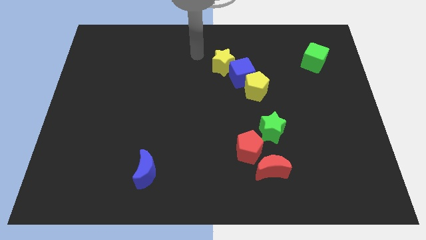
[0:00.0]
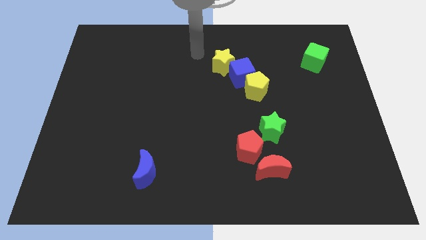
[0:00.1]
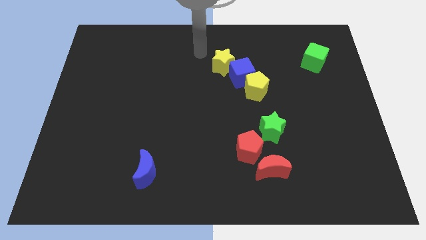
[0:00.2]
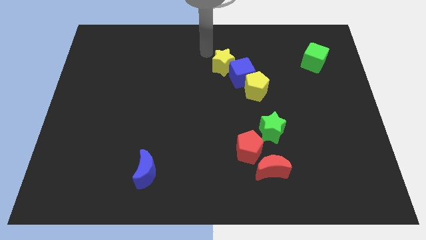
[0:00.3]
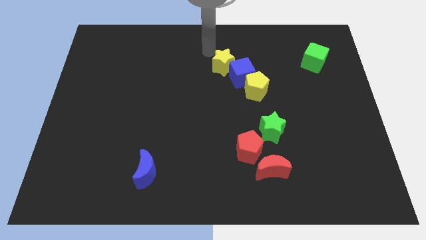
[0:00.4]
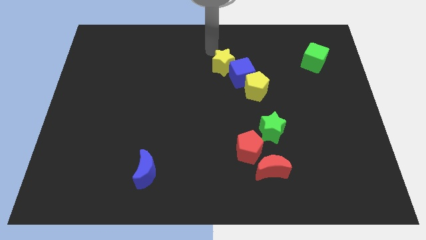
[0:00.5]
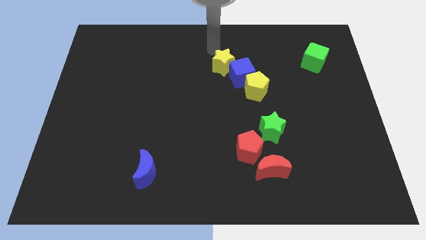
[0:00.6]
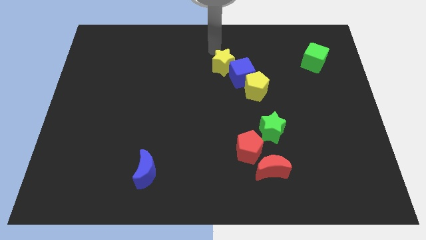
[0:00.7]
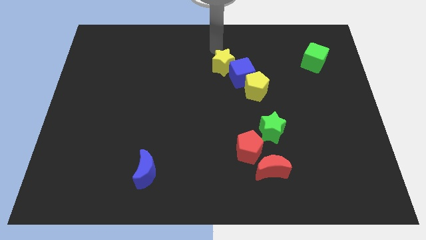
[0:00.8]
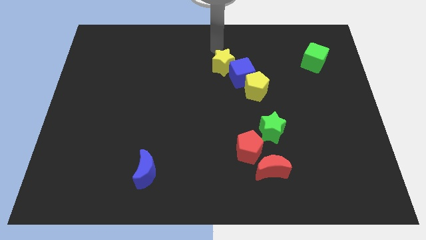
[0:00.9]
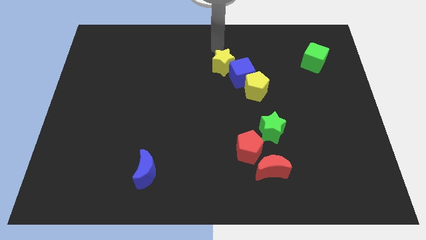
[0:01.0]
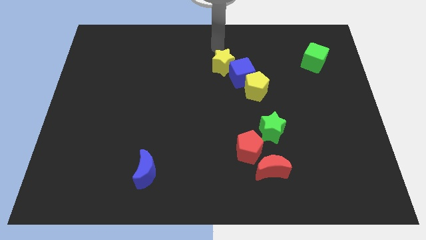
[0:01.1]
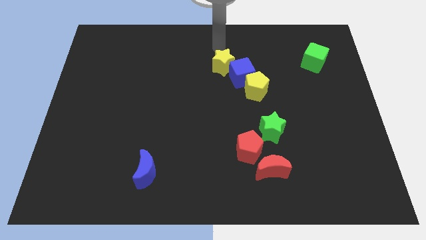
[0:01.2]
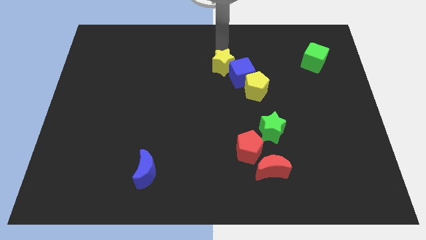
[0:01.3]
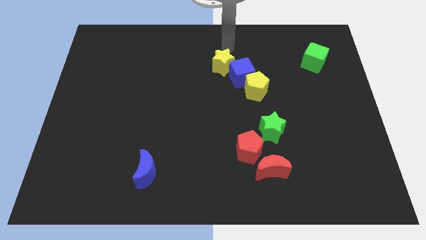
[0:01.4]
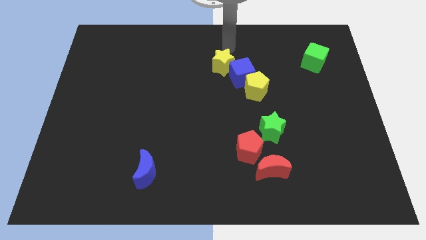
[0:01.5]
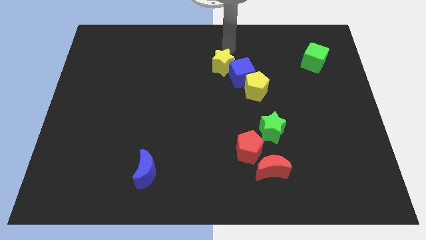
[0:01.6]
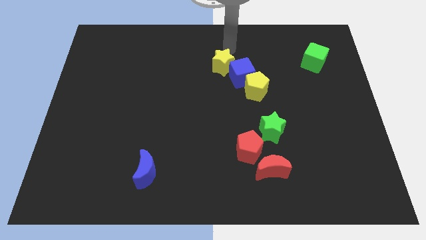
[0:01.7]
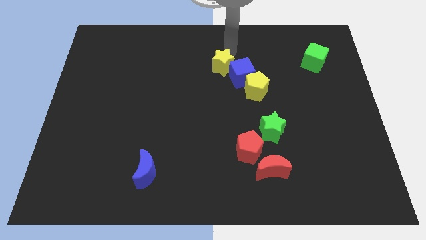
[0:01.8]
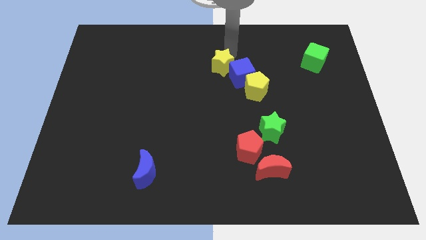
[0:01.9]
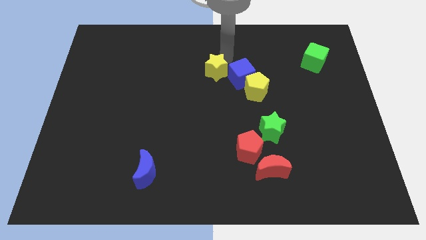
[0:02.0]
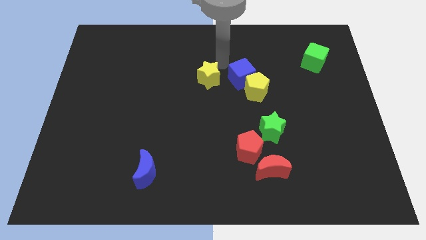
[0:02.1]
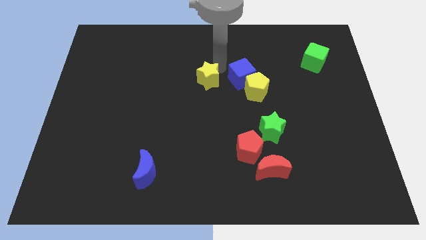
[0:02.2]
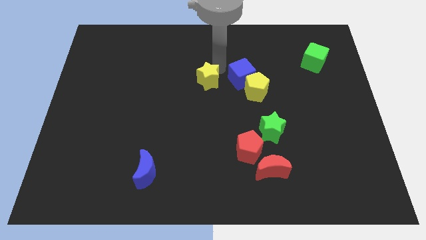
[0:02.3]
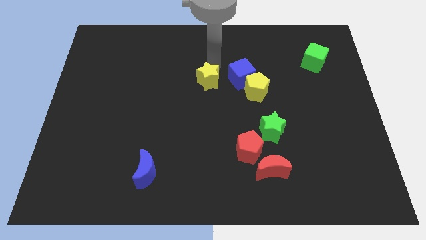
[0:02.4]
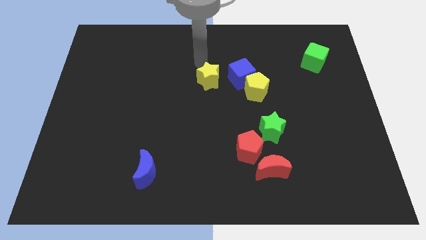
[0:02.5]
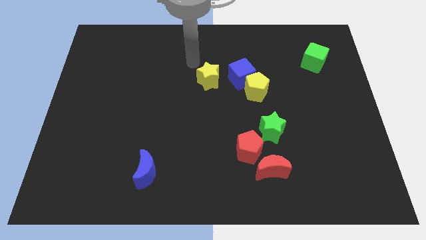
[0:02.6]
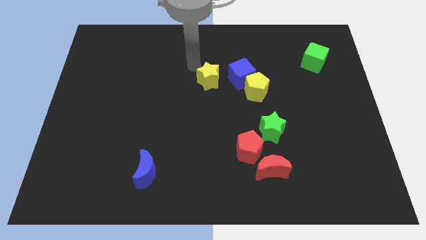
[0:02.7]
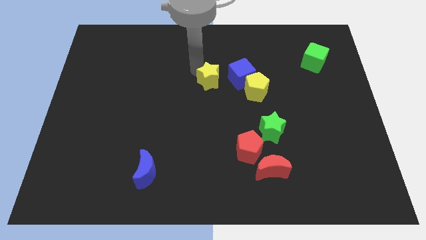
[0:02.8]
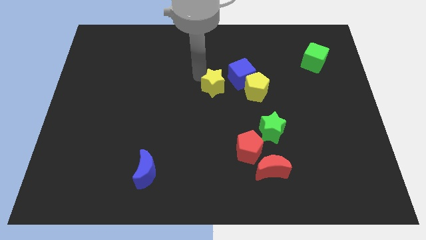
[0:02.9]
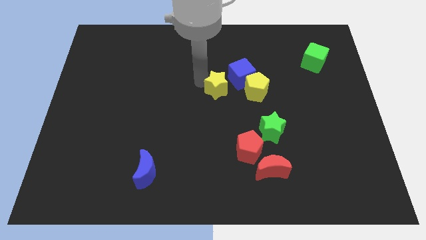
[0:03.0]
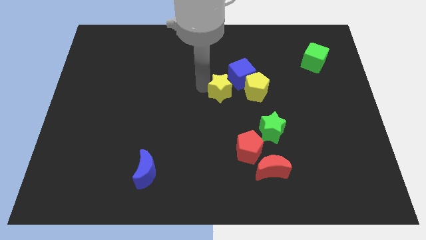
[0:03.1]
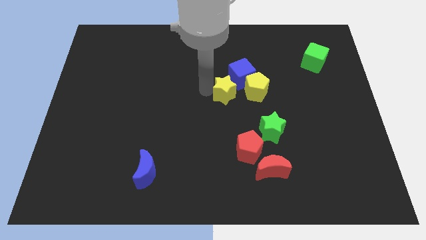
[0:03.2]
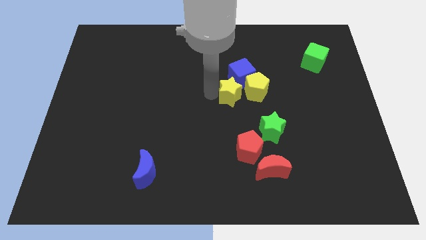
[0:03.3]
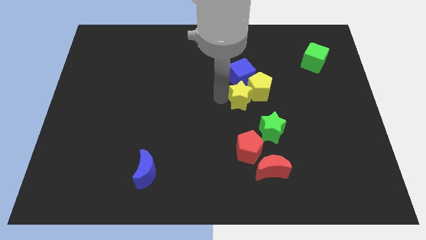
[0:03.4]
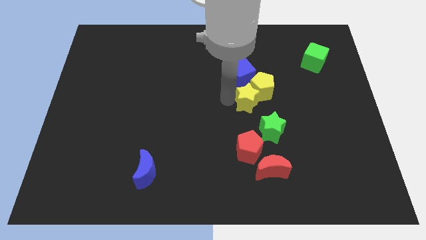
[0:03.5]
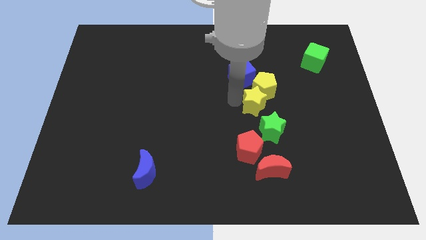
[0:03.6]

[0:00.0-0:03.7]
push the yellow star into the yellow pentagon

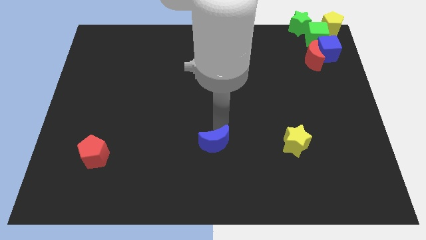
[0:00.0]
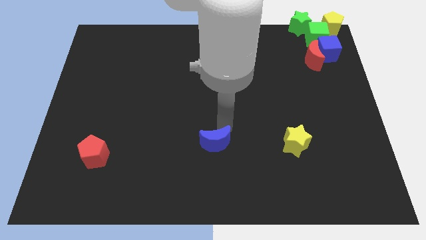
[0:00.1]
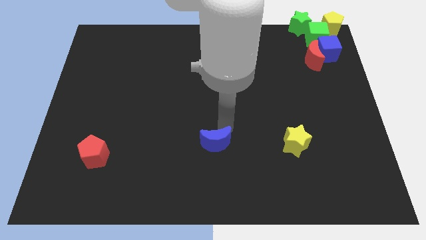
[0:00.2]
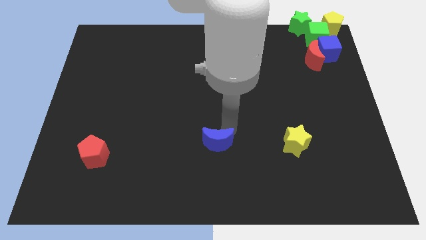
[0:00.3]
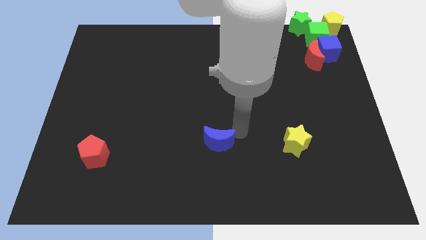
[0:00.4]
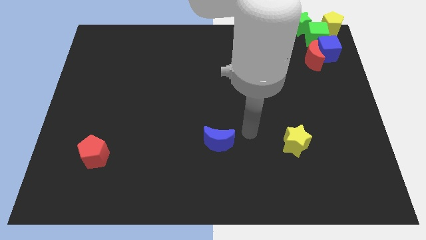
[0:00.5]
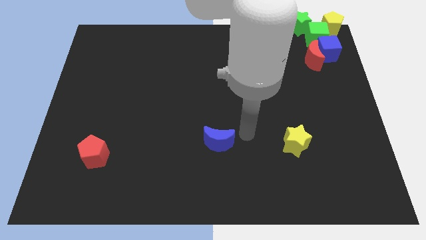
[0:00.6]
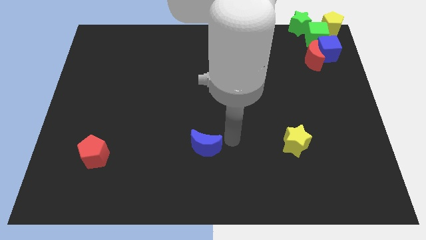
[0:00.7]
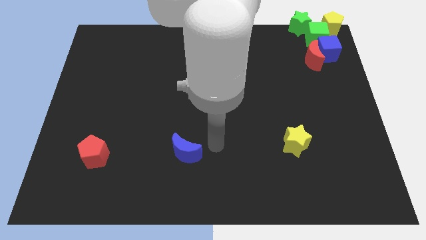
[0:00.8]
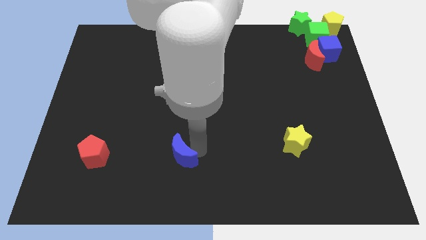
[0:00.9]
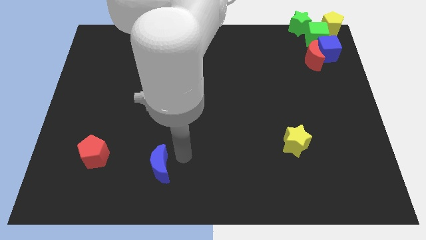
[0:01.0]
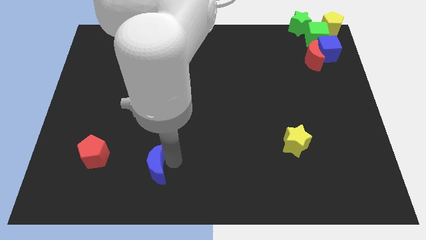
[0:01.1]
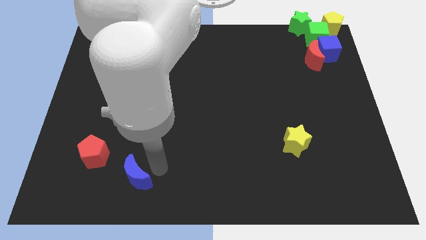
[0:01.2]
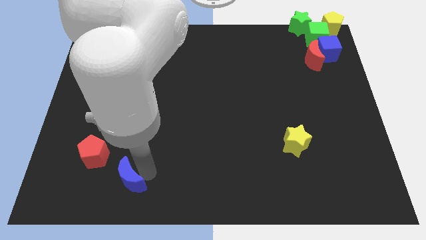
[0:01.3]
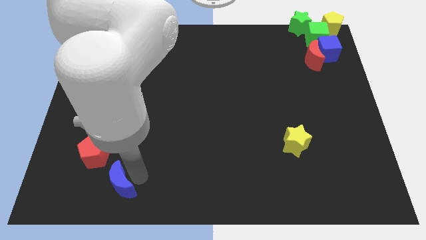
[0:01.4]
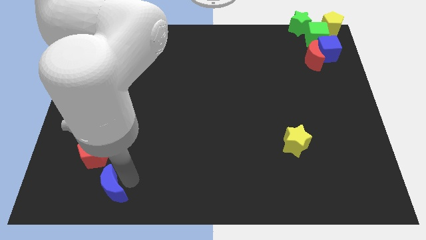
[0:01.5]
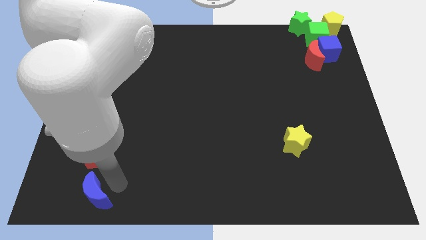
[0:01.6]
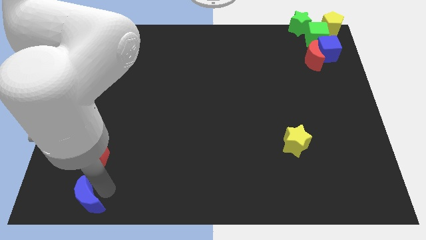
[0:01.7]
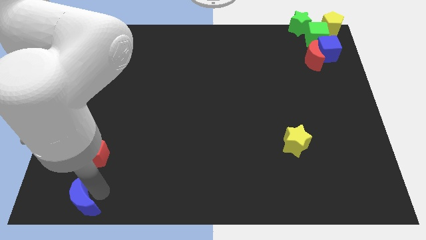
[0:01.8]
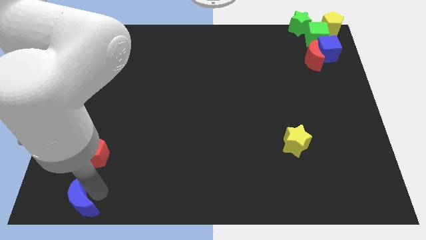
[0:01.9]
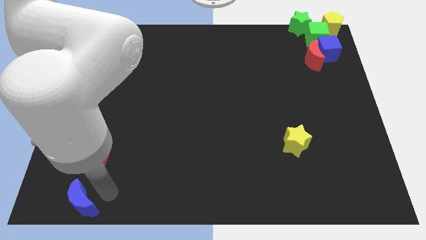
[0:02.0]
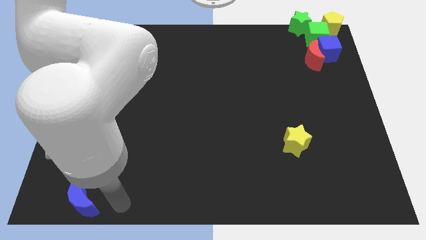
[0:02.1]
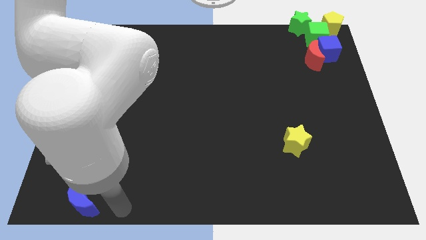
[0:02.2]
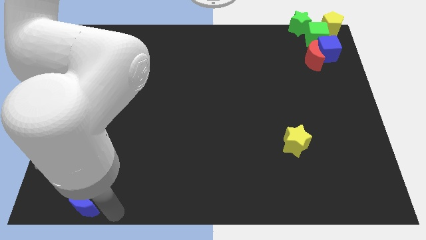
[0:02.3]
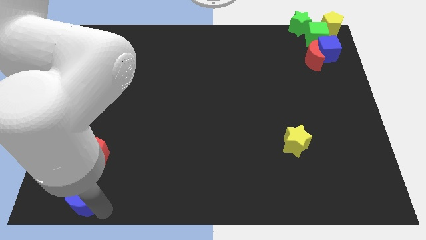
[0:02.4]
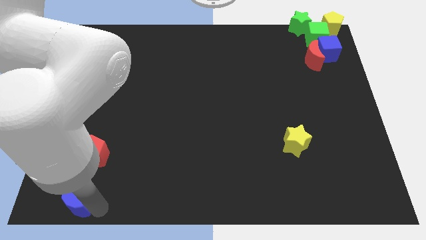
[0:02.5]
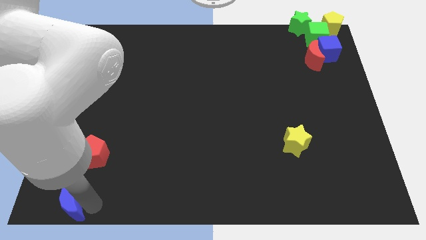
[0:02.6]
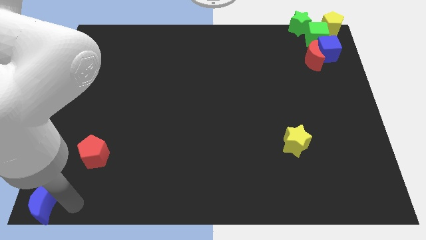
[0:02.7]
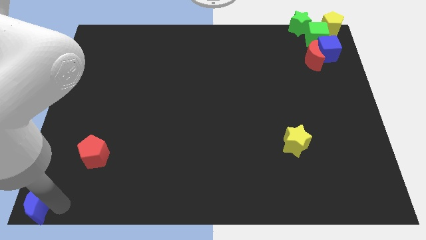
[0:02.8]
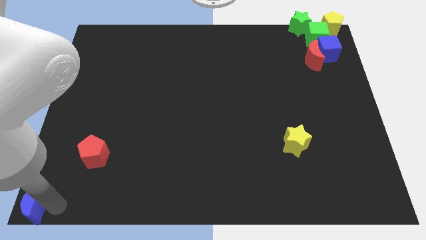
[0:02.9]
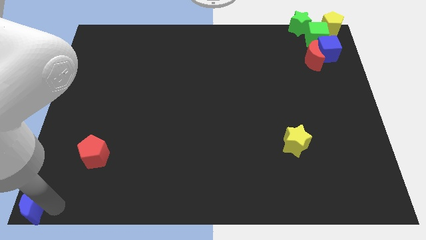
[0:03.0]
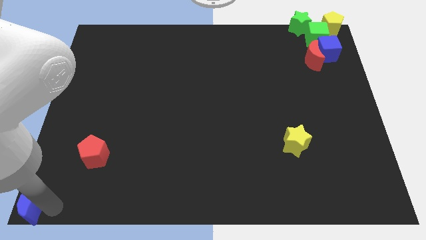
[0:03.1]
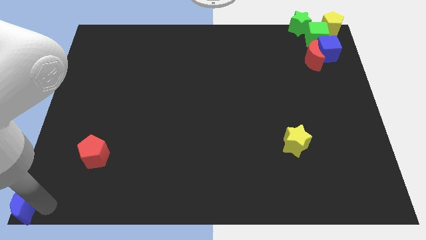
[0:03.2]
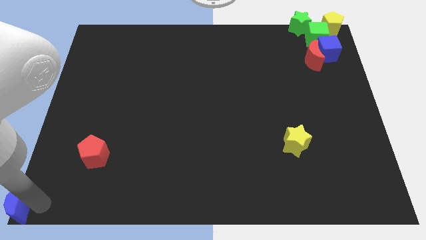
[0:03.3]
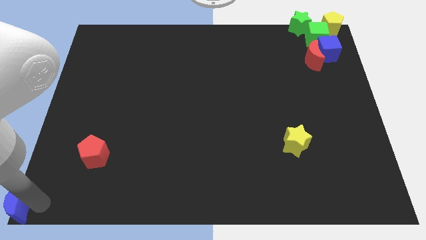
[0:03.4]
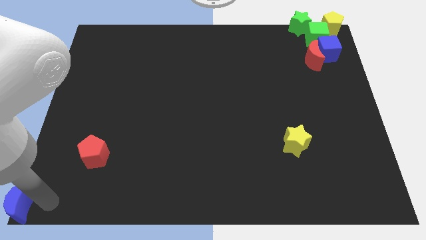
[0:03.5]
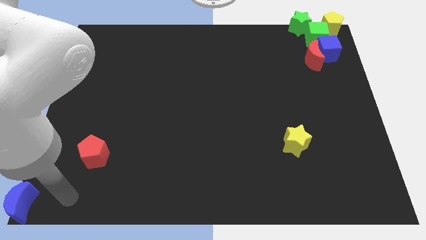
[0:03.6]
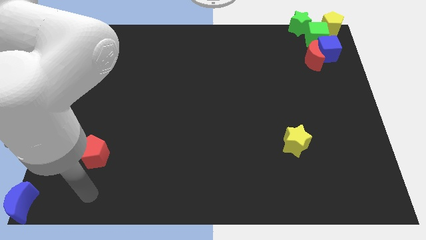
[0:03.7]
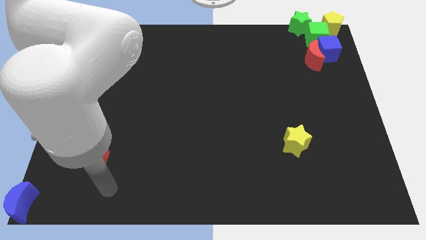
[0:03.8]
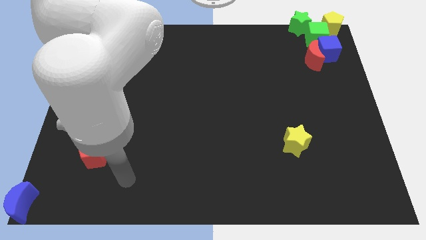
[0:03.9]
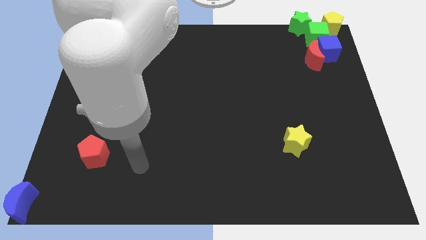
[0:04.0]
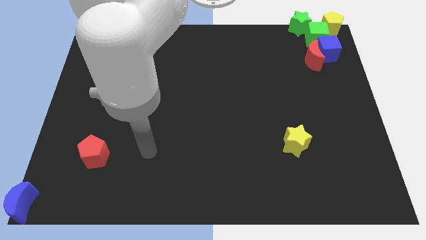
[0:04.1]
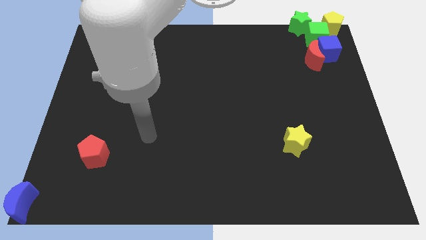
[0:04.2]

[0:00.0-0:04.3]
move the blue crescent to the bottom left corner

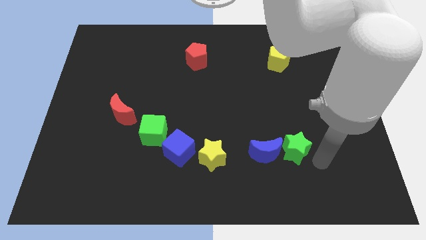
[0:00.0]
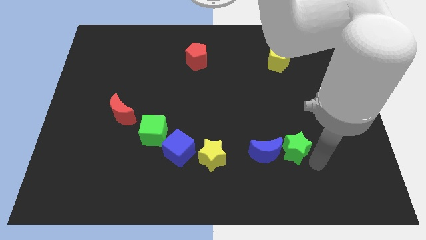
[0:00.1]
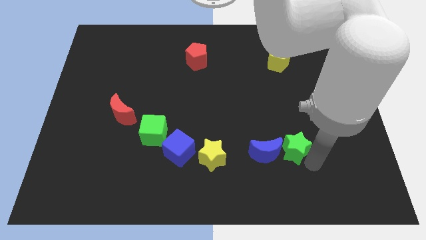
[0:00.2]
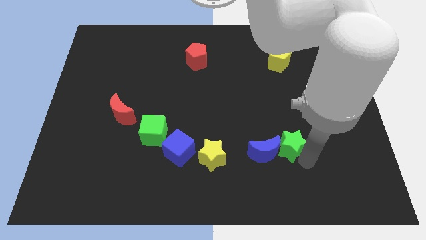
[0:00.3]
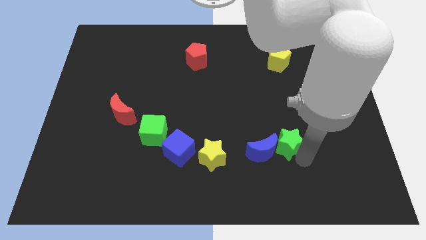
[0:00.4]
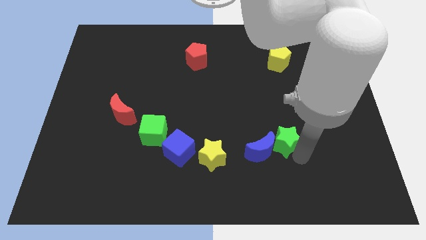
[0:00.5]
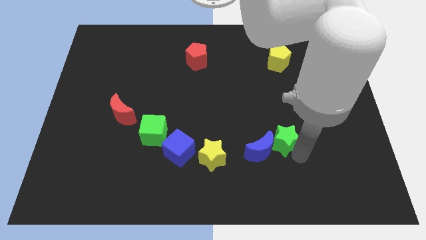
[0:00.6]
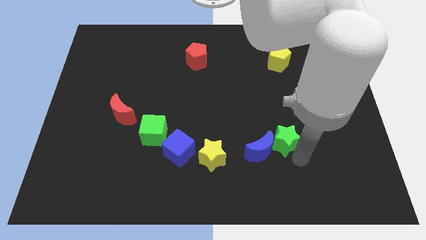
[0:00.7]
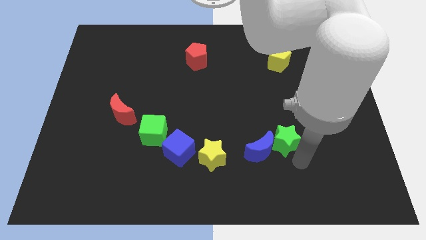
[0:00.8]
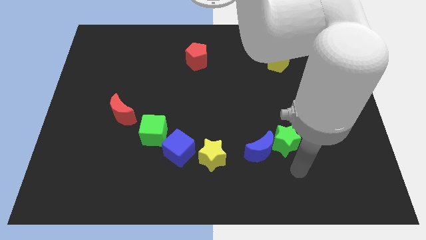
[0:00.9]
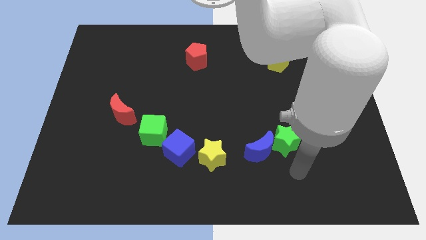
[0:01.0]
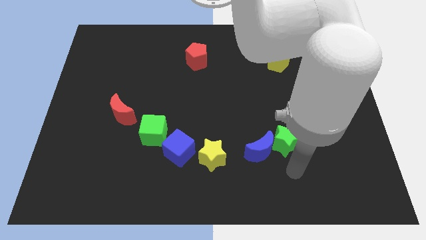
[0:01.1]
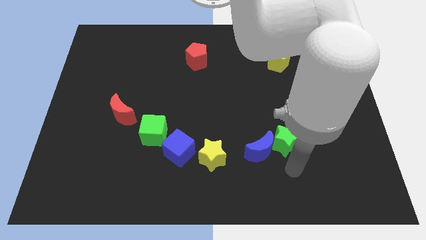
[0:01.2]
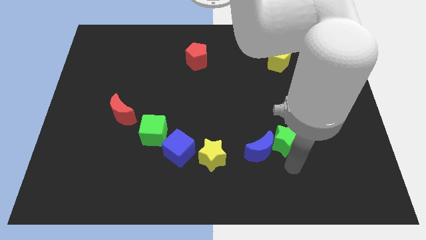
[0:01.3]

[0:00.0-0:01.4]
move the blue crescent with green star to the left of the board
